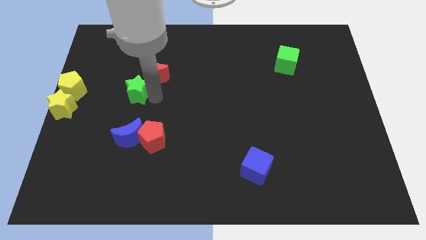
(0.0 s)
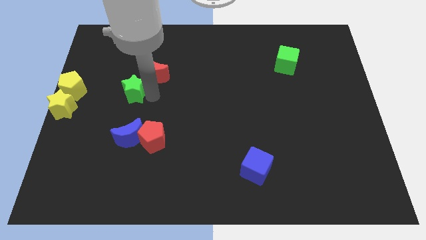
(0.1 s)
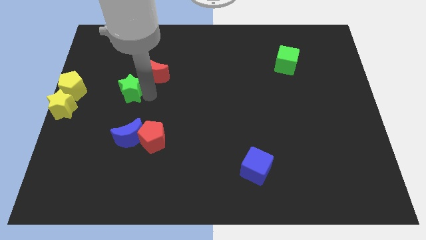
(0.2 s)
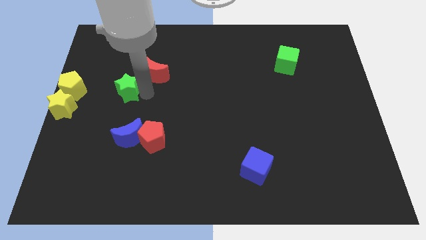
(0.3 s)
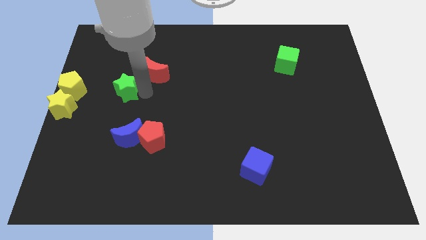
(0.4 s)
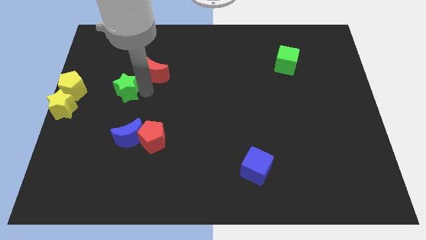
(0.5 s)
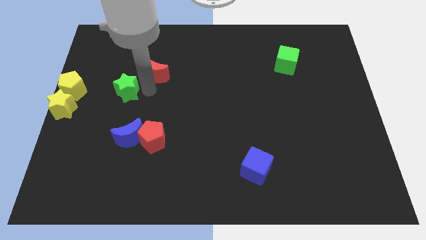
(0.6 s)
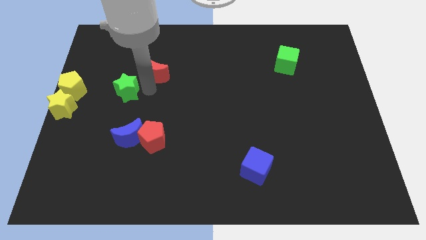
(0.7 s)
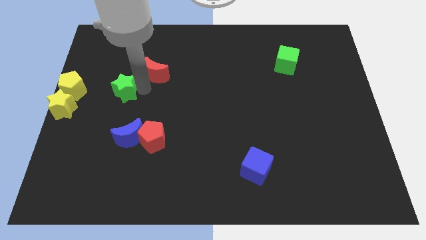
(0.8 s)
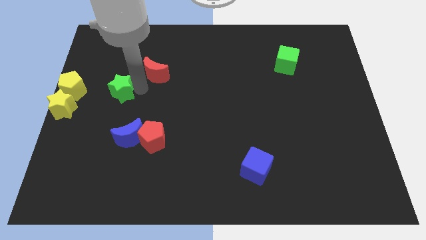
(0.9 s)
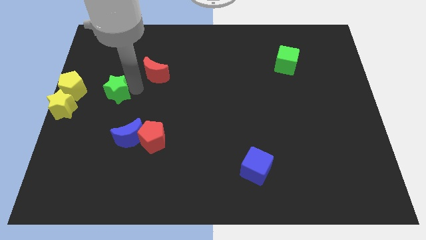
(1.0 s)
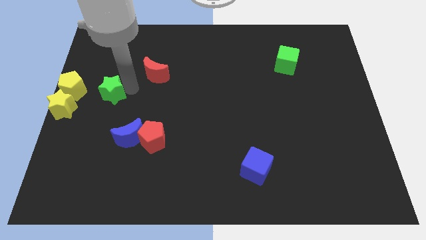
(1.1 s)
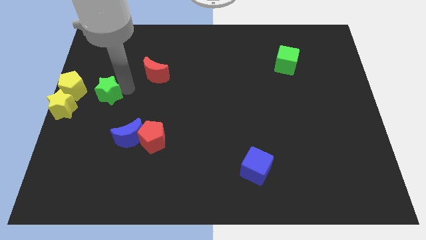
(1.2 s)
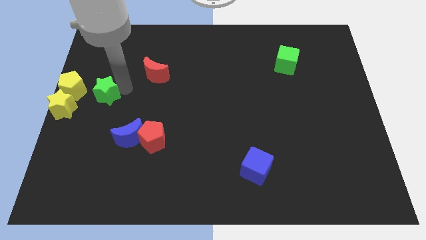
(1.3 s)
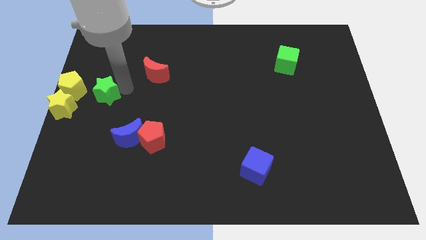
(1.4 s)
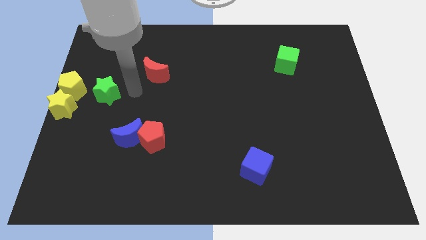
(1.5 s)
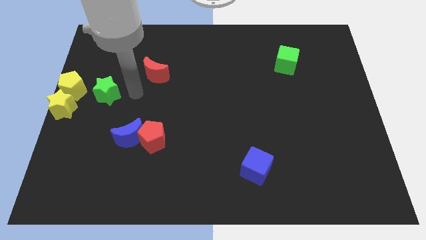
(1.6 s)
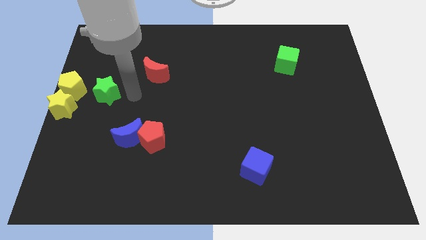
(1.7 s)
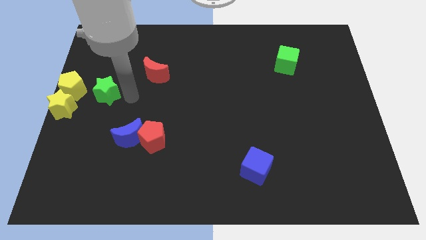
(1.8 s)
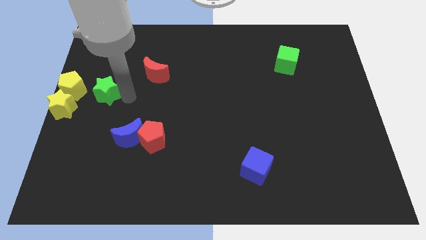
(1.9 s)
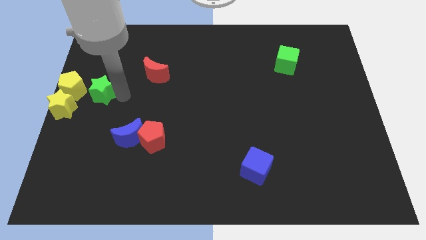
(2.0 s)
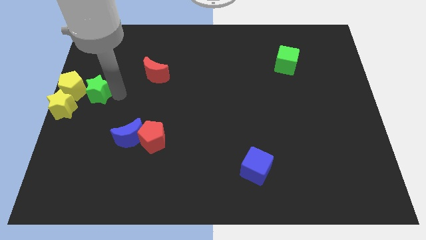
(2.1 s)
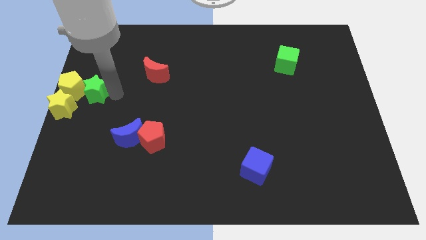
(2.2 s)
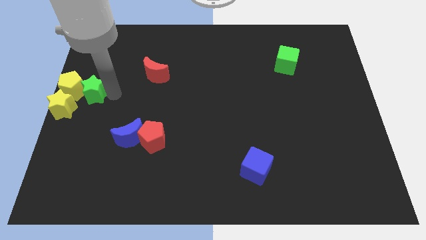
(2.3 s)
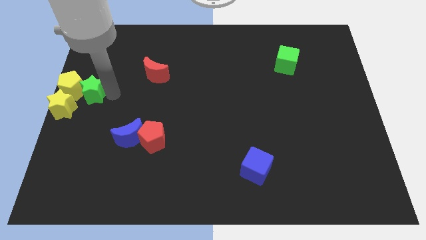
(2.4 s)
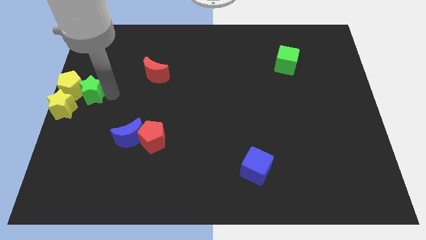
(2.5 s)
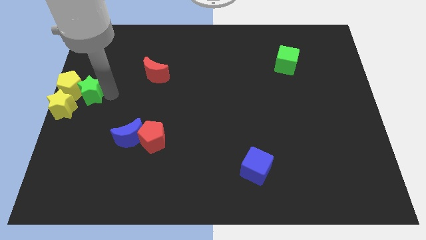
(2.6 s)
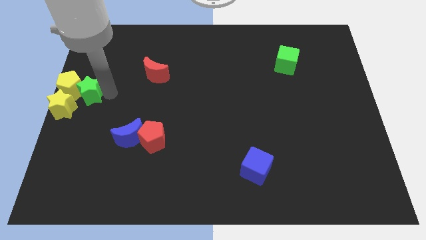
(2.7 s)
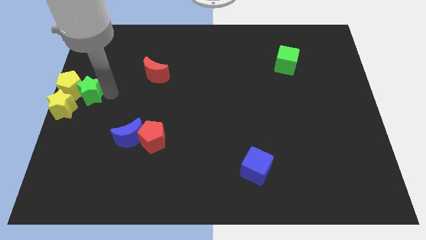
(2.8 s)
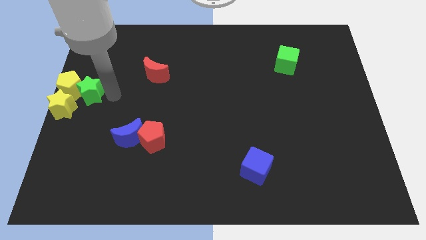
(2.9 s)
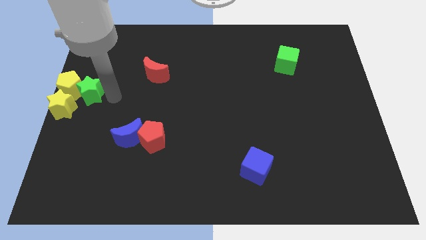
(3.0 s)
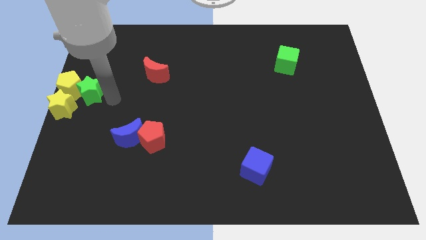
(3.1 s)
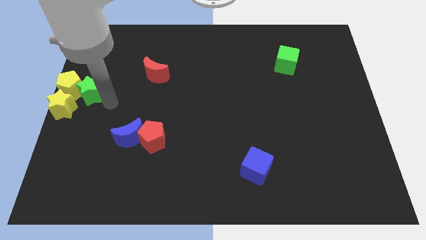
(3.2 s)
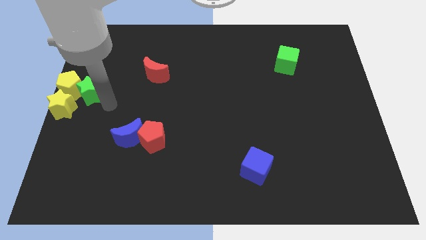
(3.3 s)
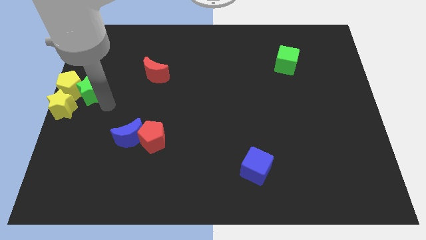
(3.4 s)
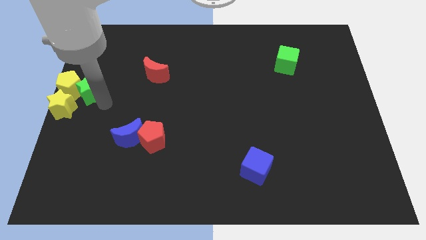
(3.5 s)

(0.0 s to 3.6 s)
push the green star into the yellow pentagon

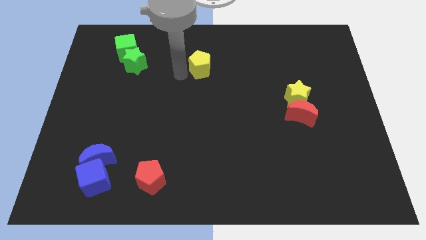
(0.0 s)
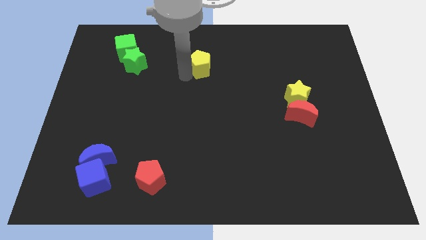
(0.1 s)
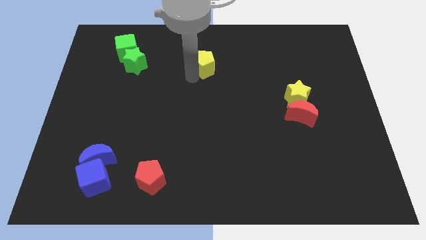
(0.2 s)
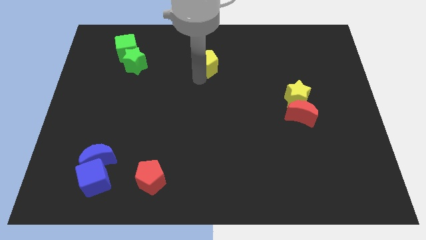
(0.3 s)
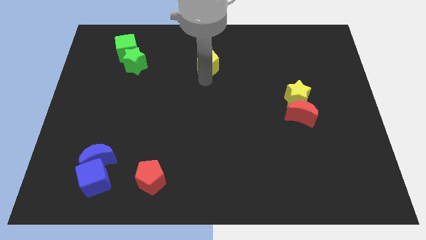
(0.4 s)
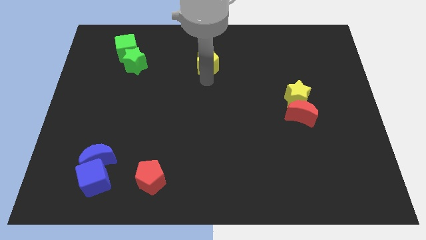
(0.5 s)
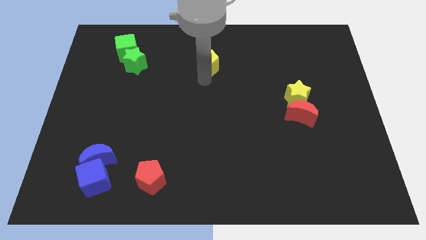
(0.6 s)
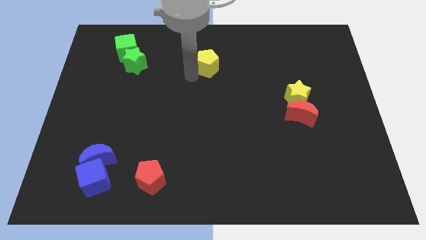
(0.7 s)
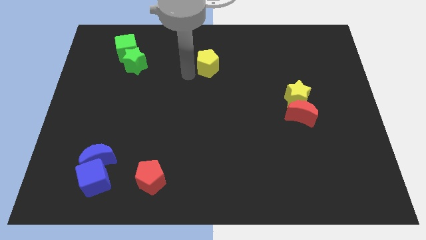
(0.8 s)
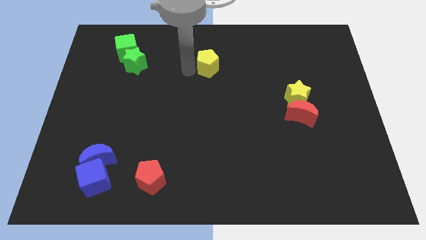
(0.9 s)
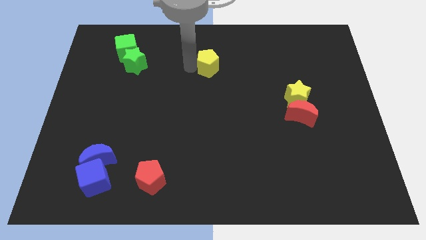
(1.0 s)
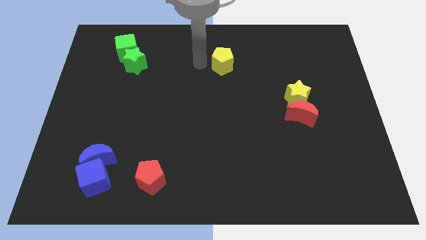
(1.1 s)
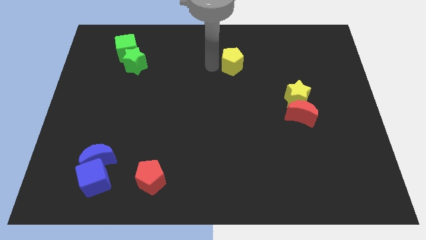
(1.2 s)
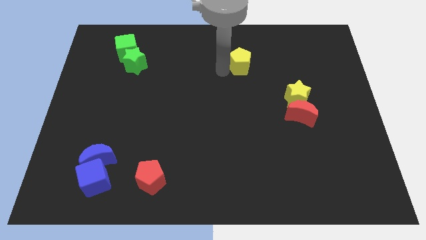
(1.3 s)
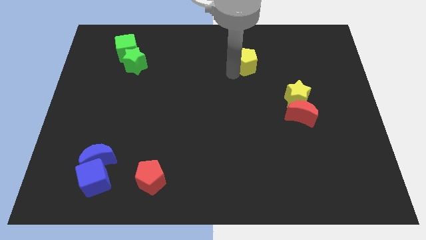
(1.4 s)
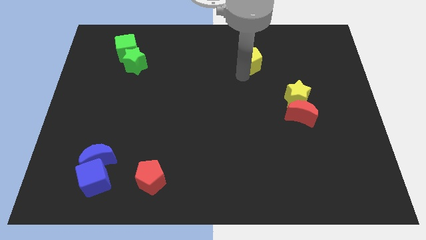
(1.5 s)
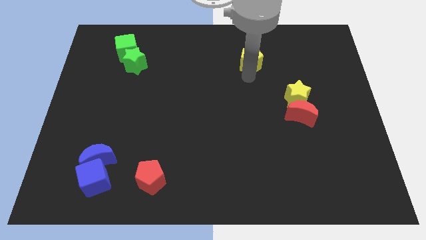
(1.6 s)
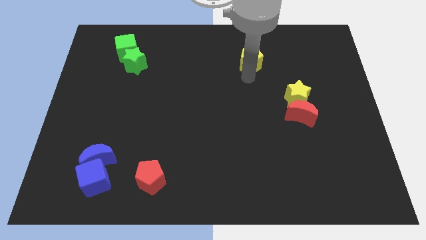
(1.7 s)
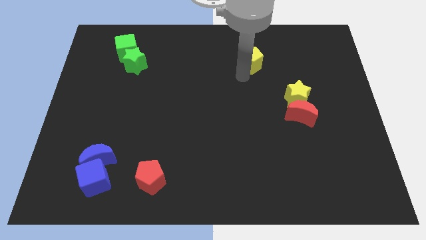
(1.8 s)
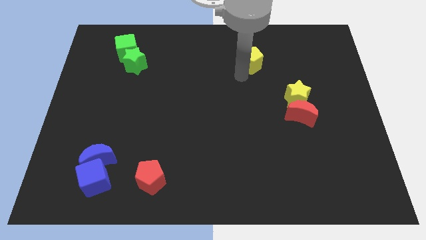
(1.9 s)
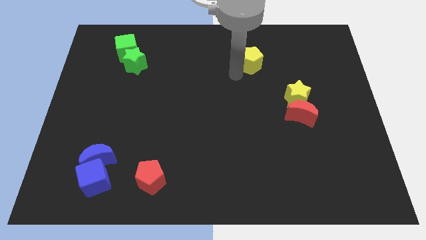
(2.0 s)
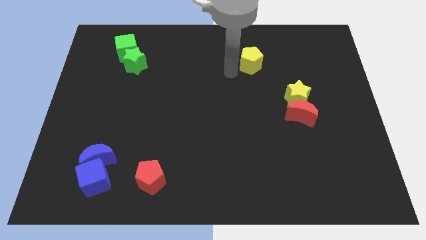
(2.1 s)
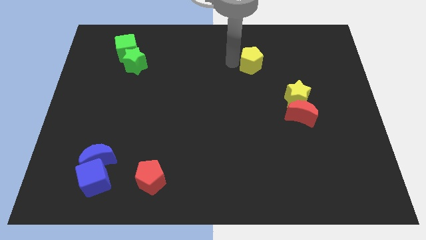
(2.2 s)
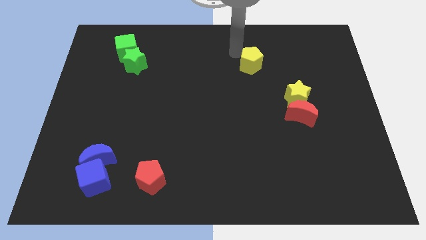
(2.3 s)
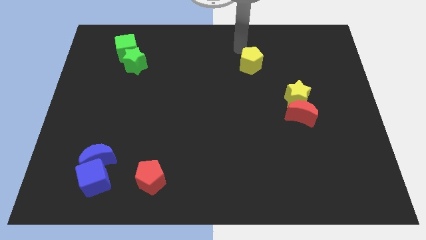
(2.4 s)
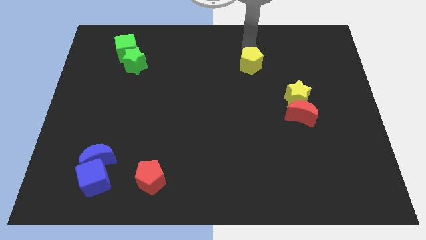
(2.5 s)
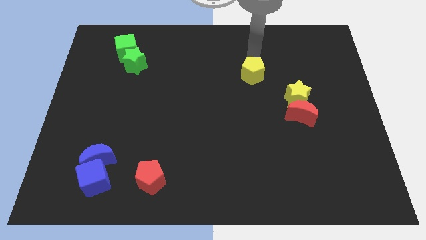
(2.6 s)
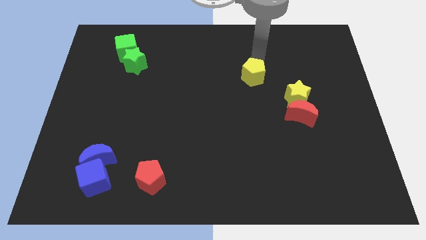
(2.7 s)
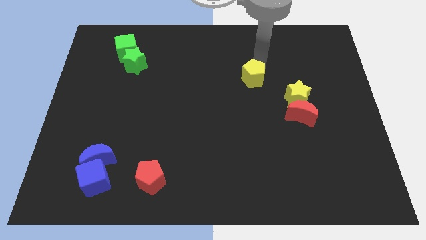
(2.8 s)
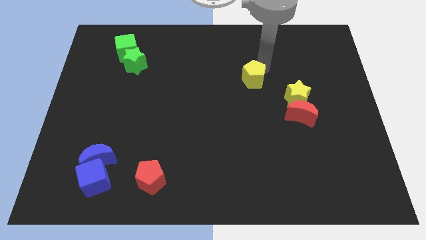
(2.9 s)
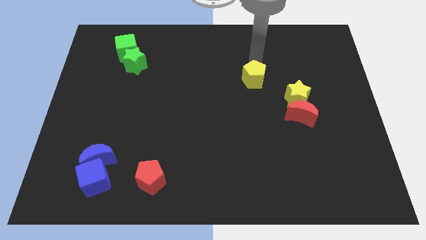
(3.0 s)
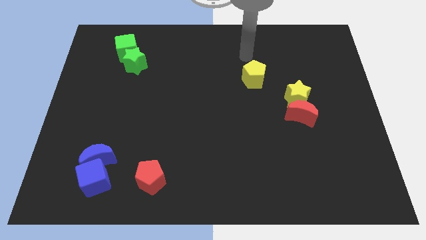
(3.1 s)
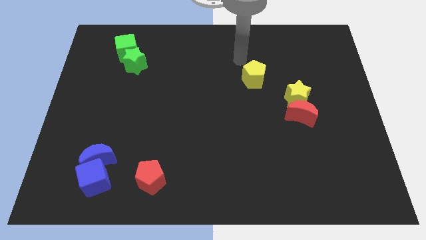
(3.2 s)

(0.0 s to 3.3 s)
move the yellow pentagon diagonally top left yellow star

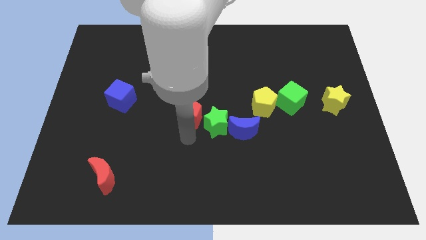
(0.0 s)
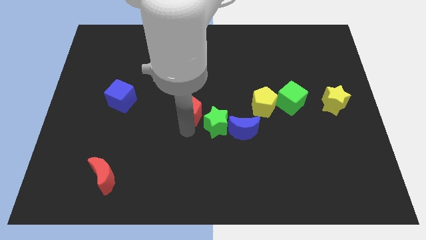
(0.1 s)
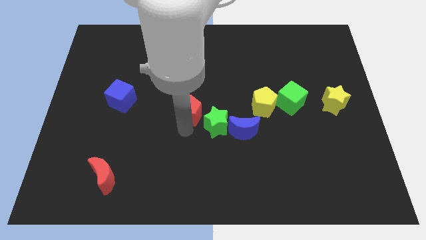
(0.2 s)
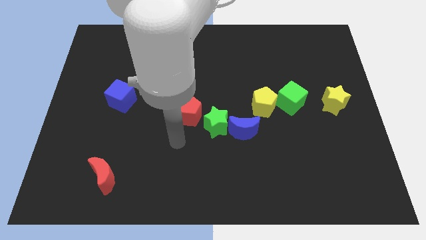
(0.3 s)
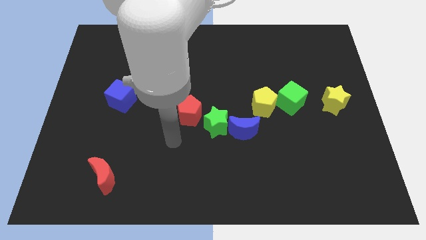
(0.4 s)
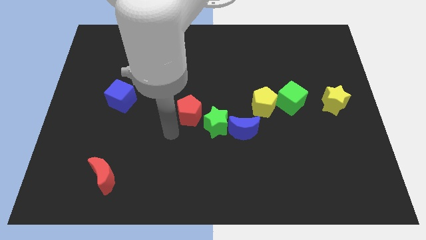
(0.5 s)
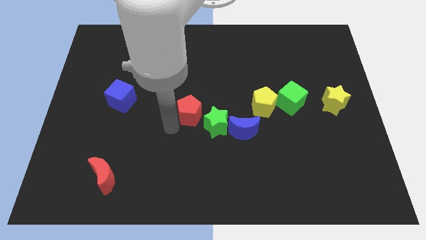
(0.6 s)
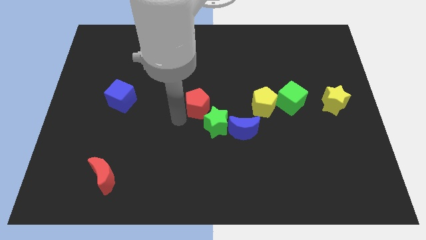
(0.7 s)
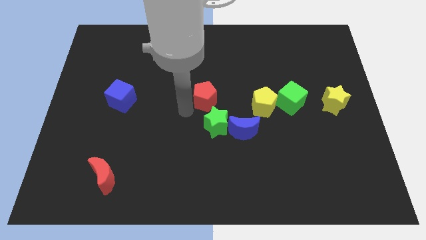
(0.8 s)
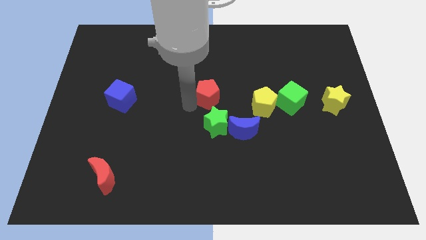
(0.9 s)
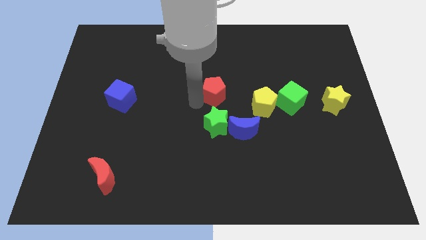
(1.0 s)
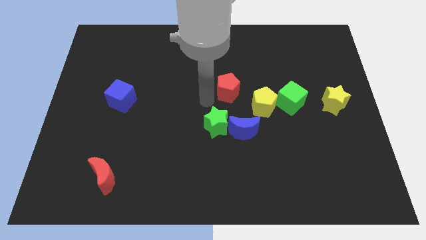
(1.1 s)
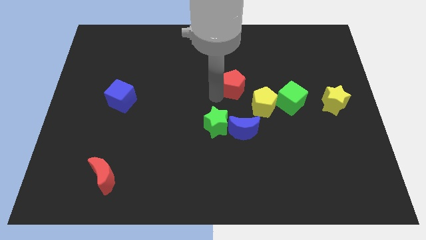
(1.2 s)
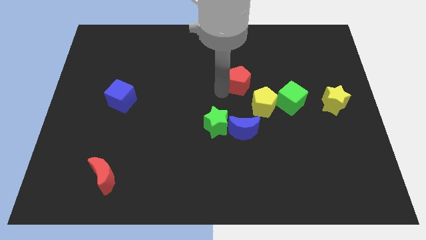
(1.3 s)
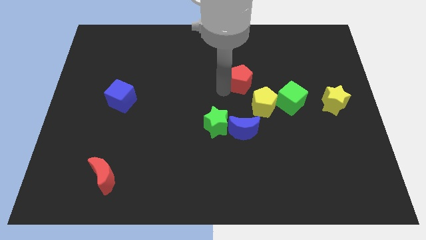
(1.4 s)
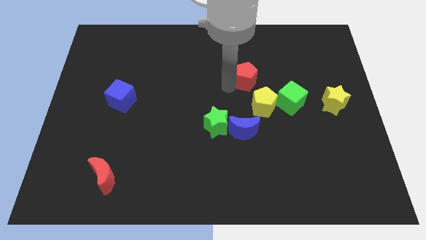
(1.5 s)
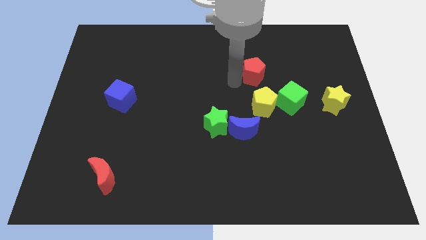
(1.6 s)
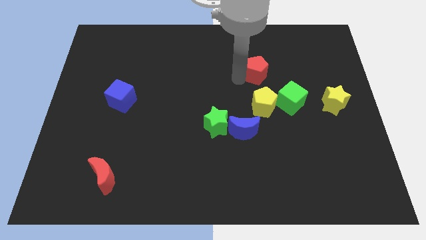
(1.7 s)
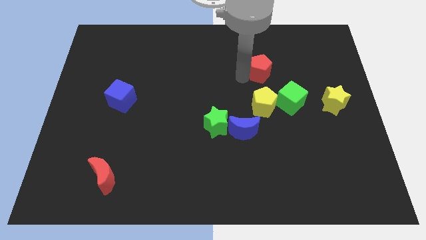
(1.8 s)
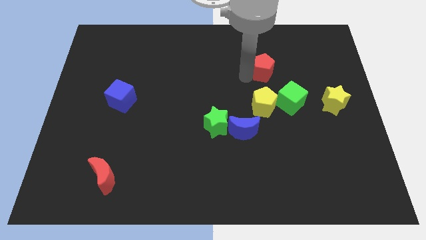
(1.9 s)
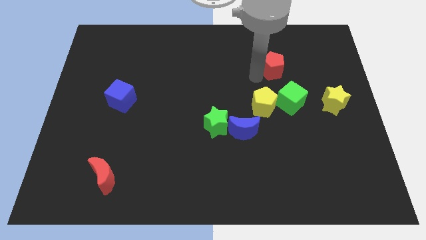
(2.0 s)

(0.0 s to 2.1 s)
push the red pentagon to the top of yellow pentagon
